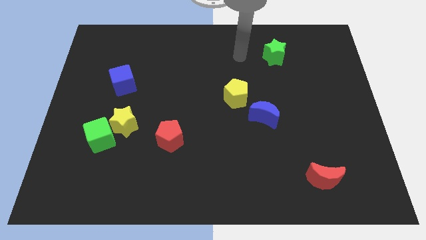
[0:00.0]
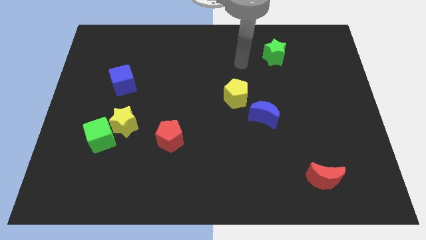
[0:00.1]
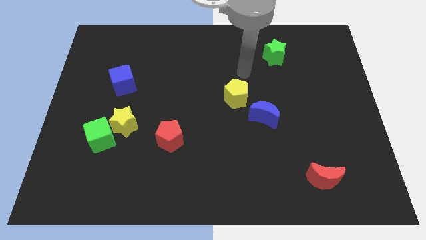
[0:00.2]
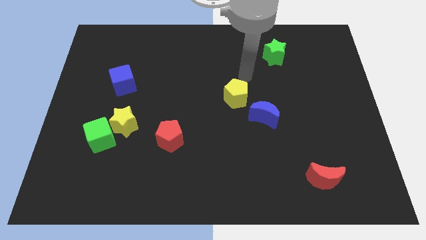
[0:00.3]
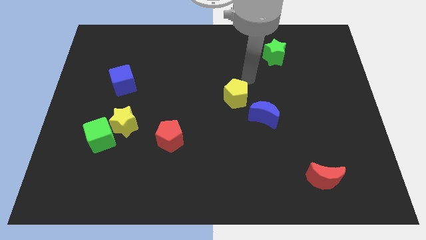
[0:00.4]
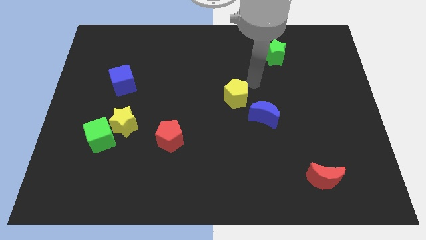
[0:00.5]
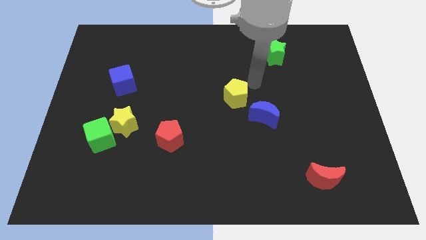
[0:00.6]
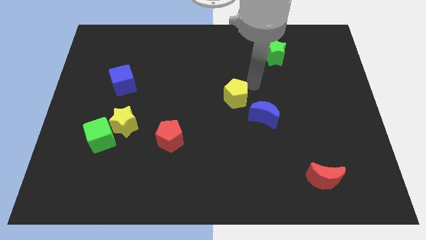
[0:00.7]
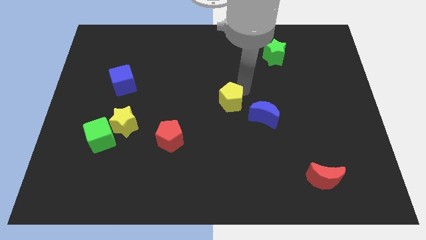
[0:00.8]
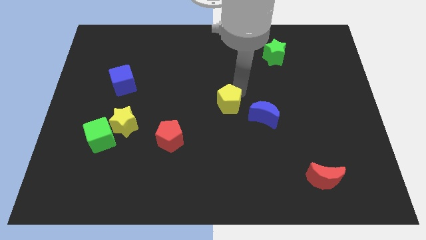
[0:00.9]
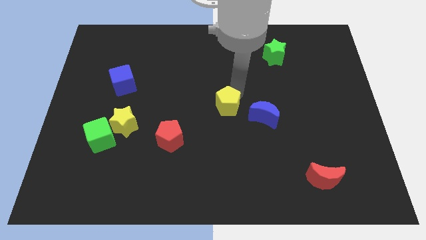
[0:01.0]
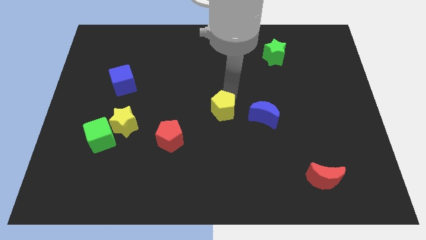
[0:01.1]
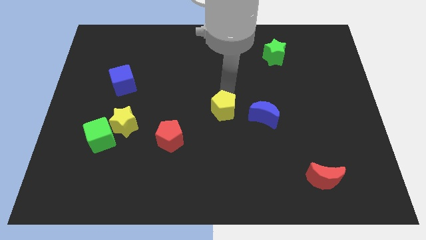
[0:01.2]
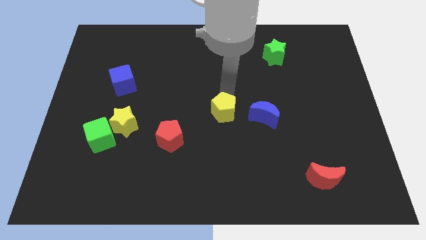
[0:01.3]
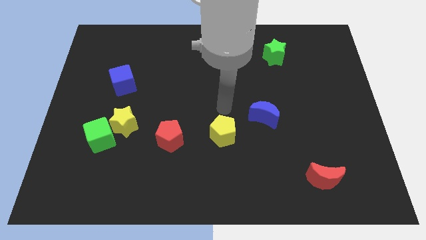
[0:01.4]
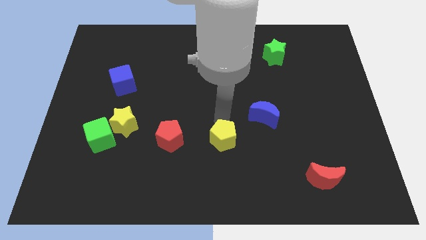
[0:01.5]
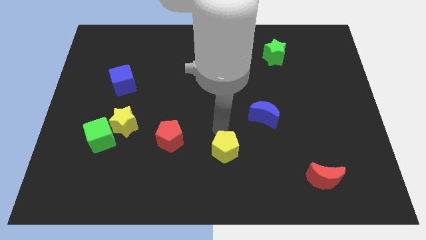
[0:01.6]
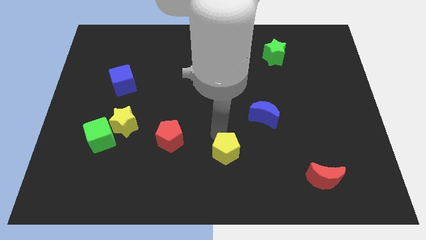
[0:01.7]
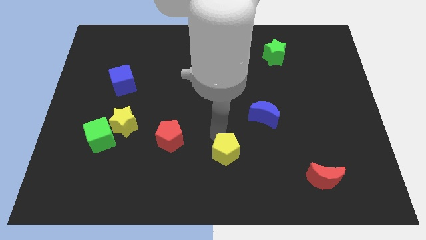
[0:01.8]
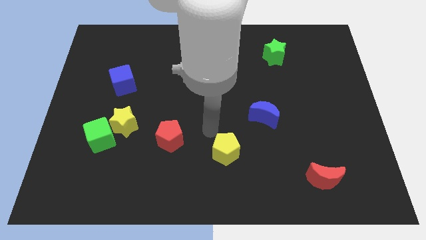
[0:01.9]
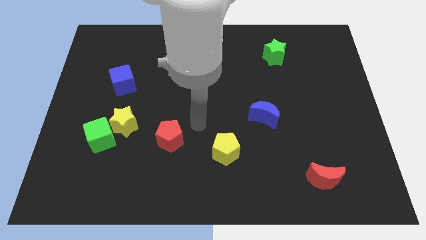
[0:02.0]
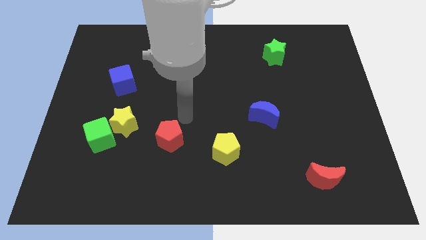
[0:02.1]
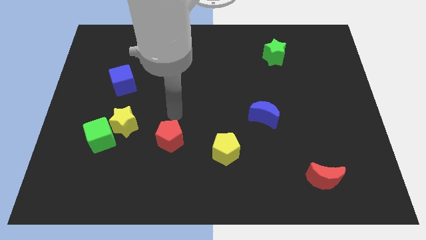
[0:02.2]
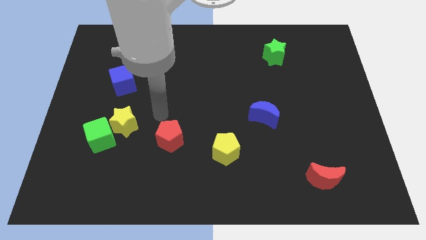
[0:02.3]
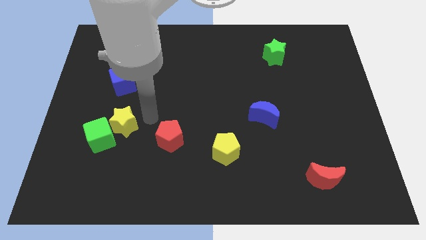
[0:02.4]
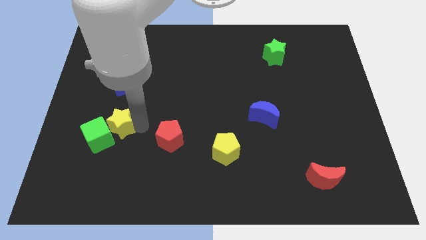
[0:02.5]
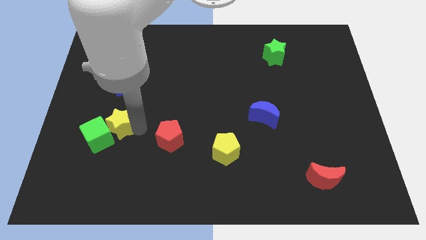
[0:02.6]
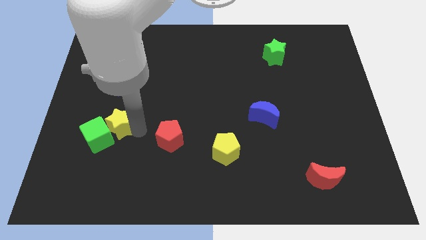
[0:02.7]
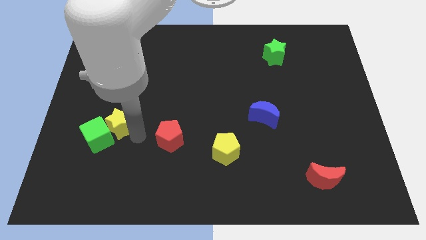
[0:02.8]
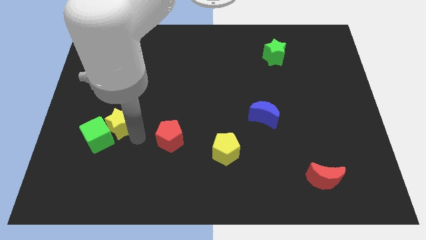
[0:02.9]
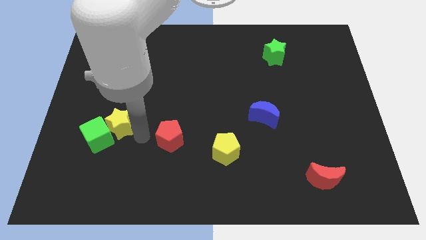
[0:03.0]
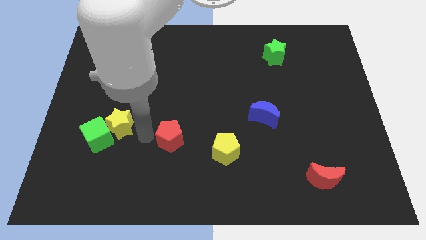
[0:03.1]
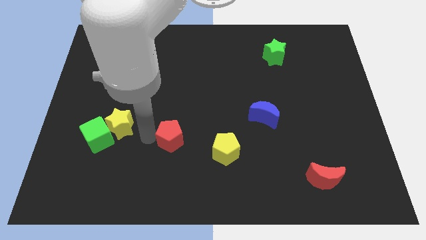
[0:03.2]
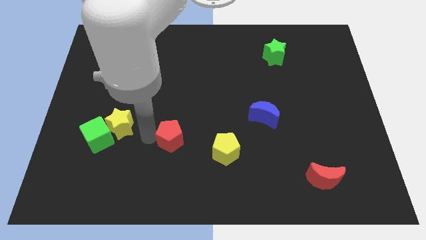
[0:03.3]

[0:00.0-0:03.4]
place the yellow pentagon diagonally bottom left to the bluue moon

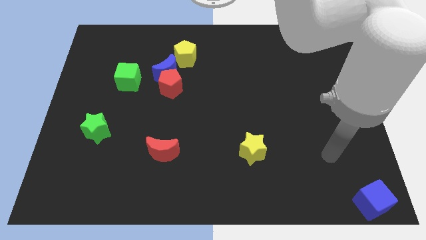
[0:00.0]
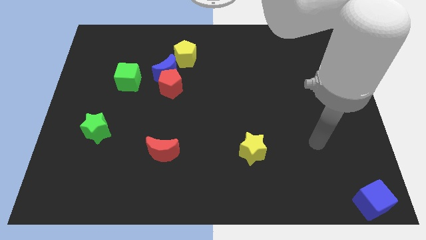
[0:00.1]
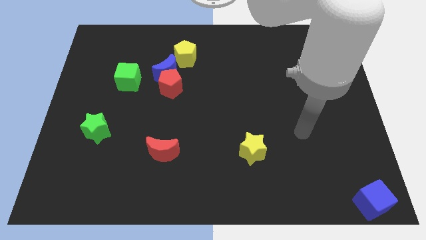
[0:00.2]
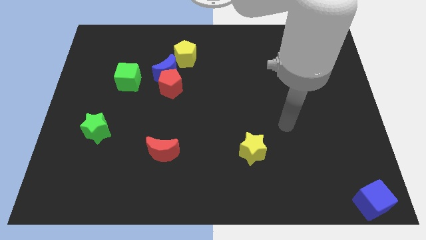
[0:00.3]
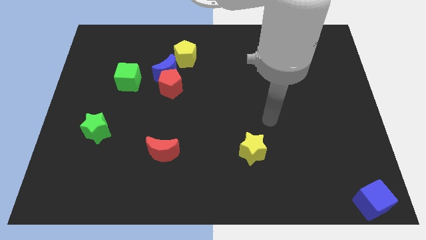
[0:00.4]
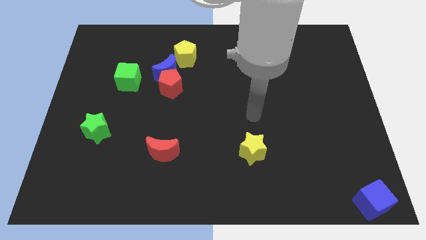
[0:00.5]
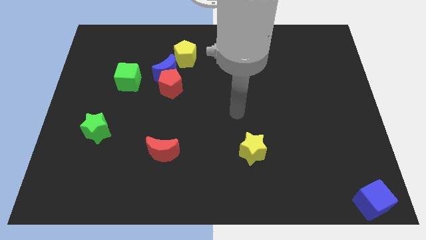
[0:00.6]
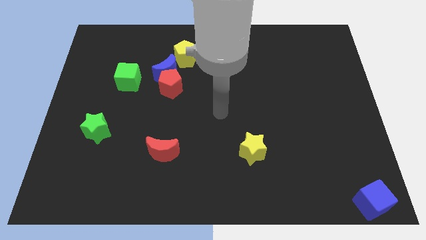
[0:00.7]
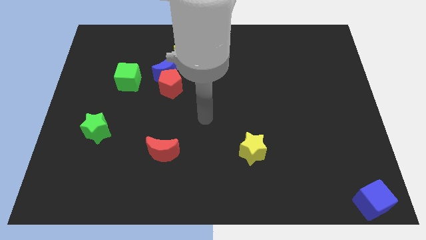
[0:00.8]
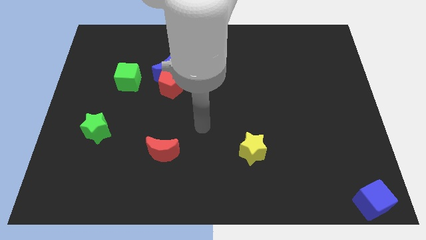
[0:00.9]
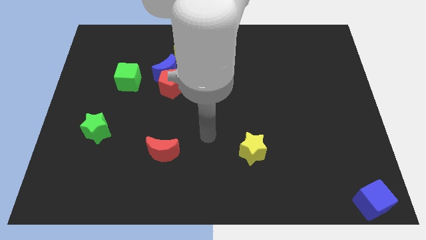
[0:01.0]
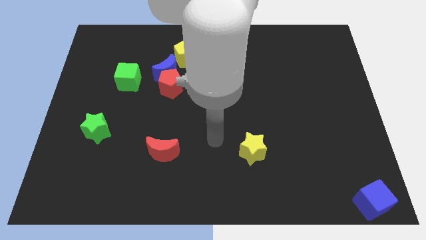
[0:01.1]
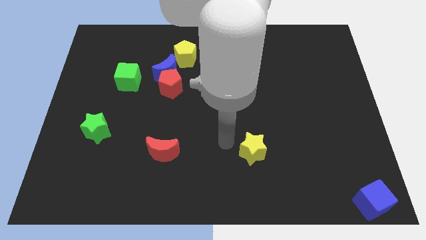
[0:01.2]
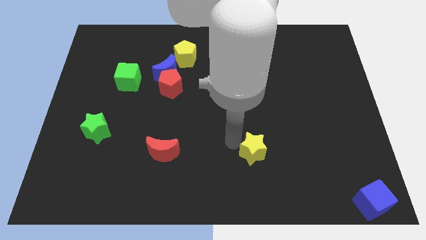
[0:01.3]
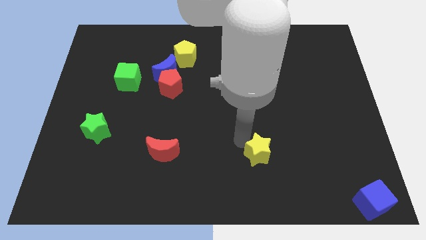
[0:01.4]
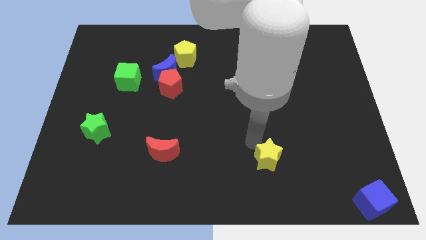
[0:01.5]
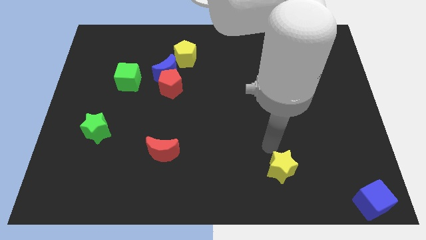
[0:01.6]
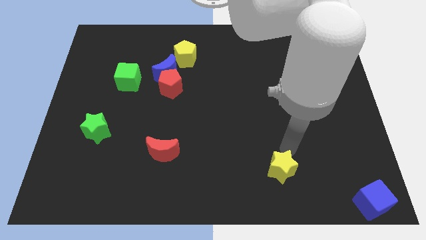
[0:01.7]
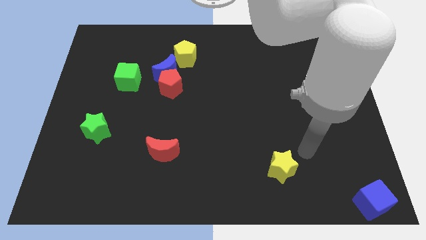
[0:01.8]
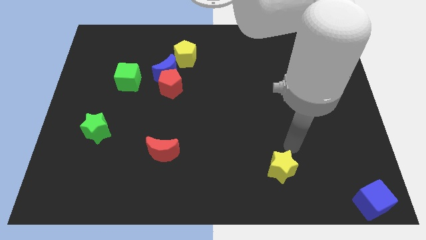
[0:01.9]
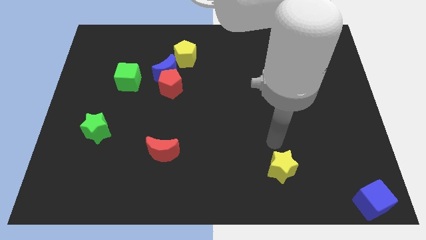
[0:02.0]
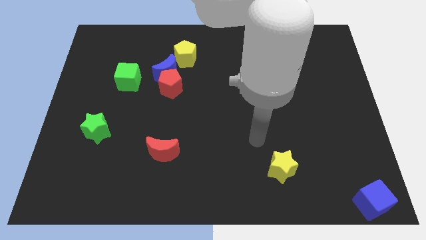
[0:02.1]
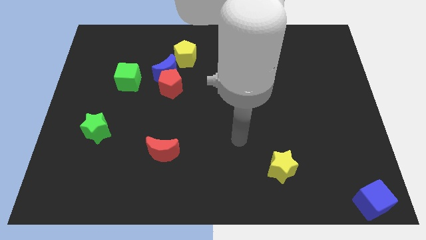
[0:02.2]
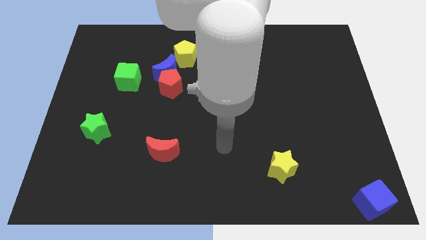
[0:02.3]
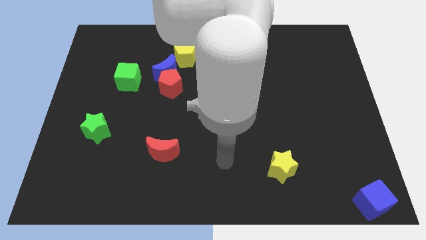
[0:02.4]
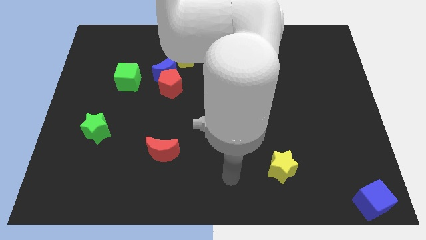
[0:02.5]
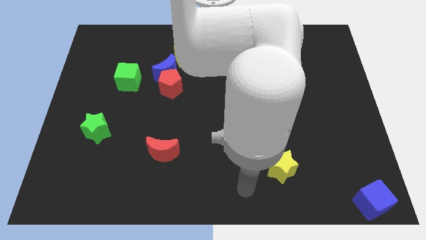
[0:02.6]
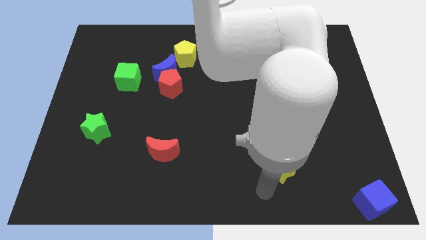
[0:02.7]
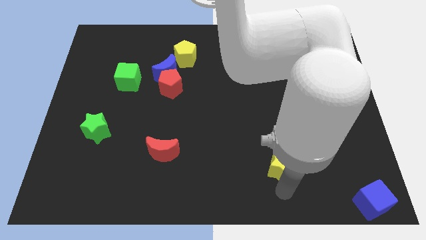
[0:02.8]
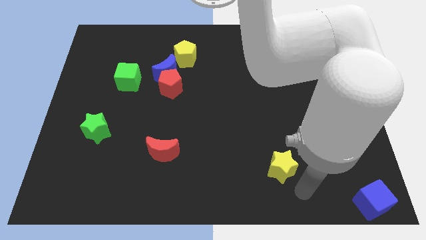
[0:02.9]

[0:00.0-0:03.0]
slightly push the yellow star right

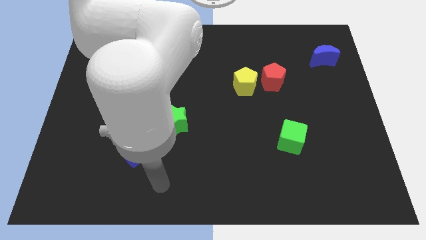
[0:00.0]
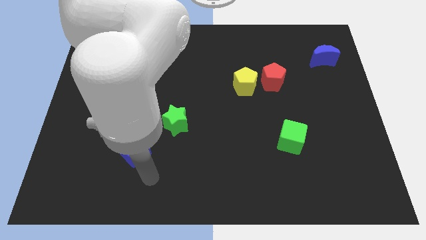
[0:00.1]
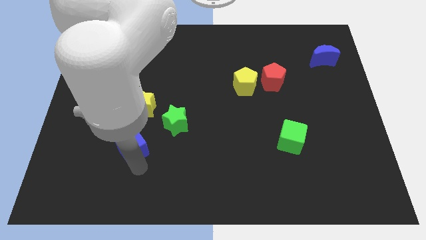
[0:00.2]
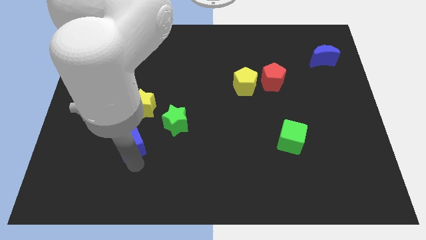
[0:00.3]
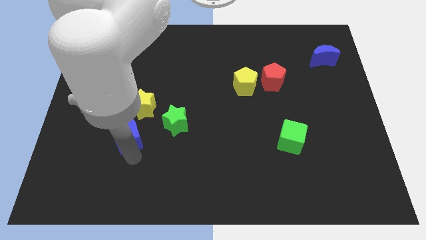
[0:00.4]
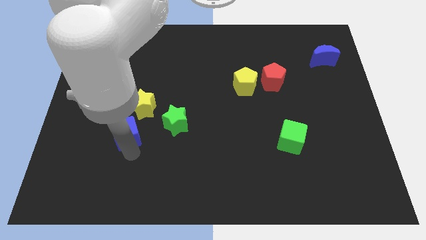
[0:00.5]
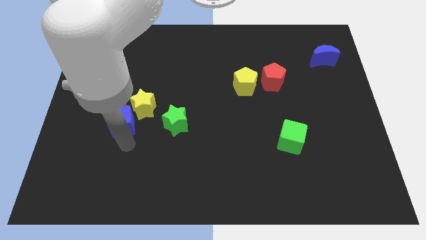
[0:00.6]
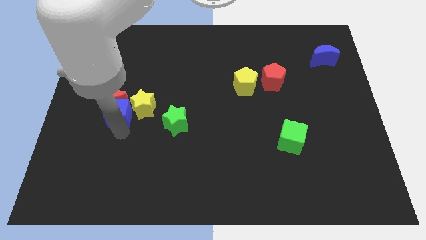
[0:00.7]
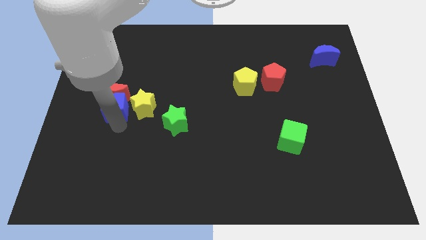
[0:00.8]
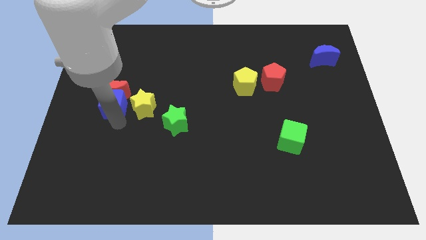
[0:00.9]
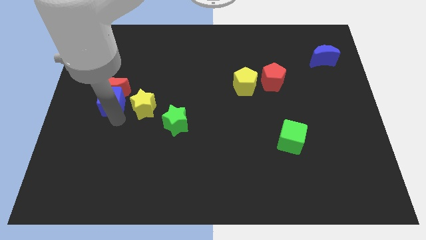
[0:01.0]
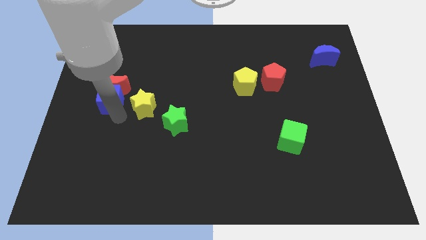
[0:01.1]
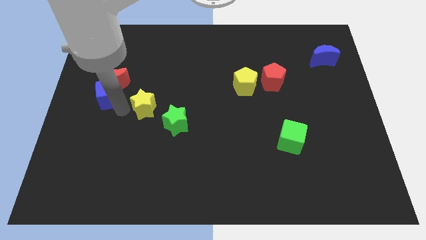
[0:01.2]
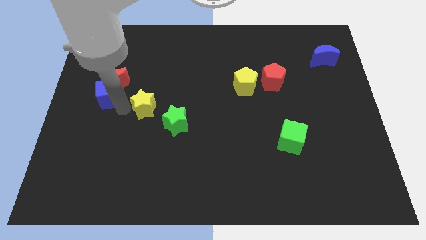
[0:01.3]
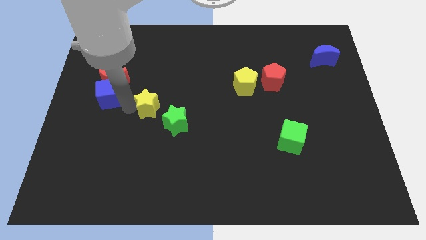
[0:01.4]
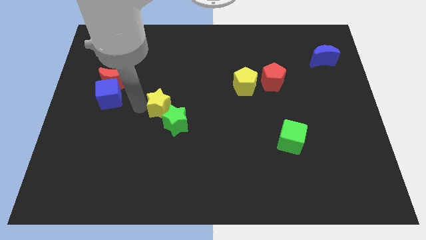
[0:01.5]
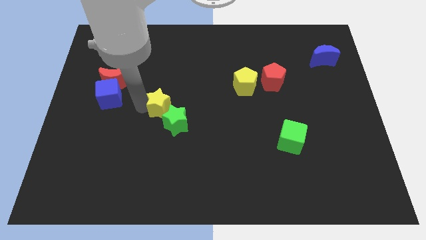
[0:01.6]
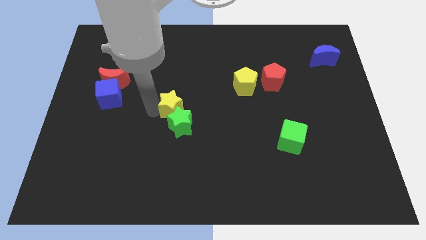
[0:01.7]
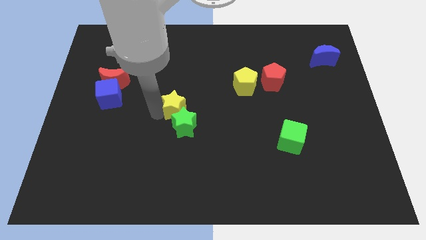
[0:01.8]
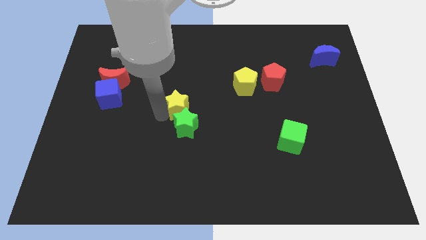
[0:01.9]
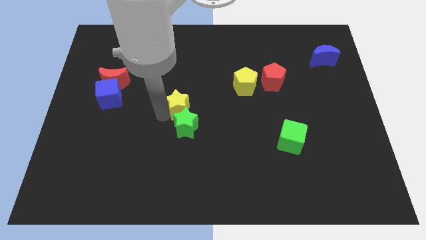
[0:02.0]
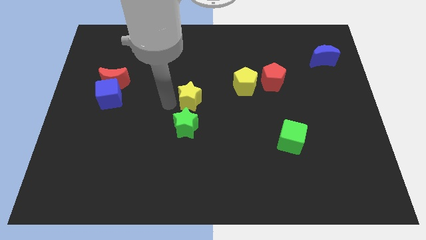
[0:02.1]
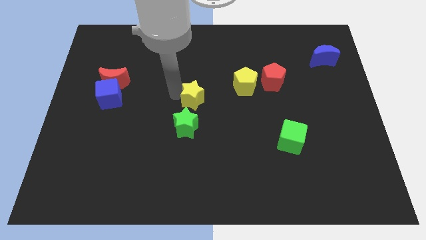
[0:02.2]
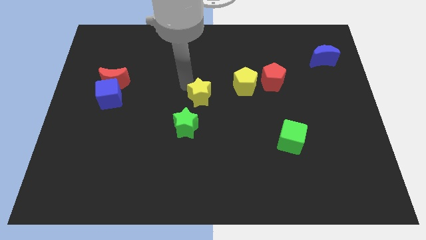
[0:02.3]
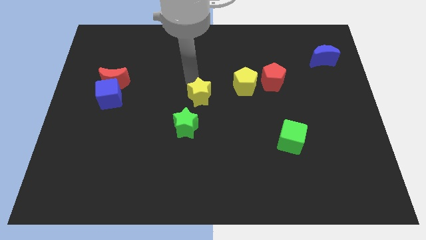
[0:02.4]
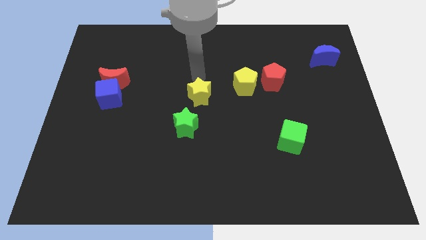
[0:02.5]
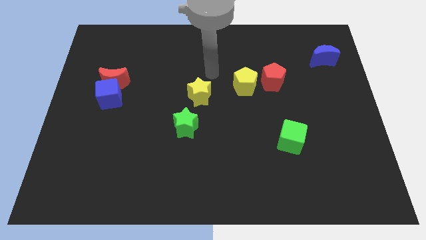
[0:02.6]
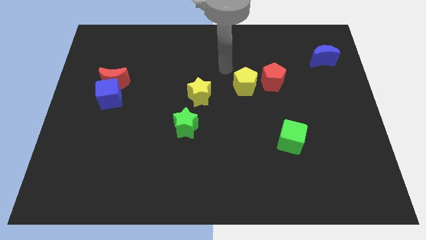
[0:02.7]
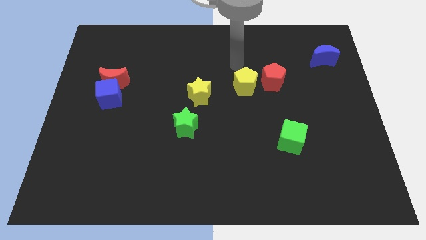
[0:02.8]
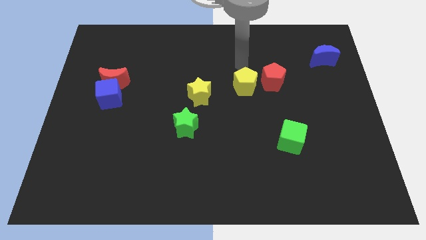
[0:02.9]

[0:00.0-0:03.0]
place your arm above yellow pentagon
